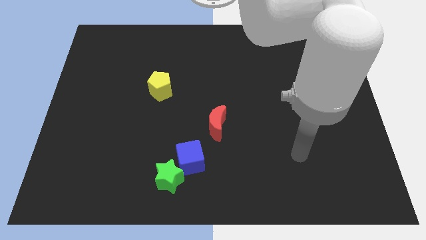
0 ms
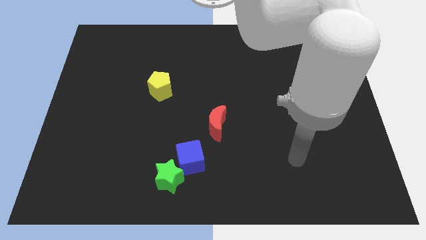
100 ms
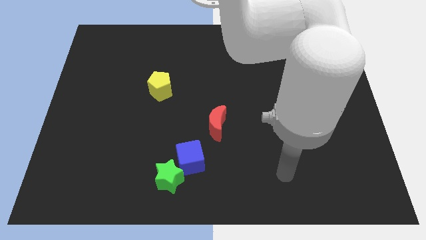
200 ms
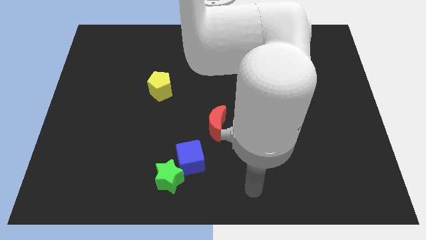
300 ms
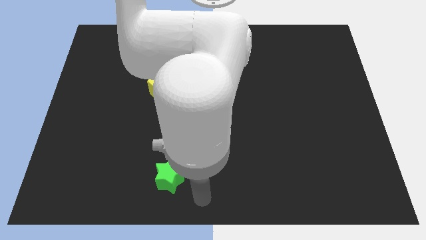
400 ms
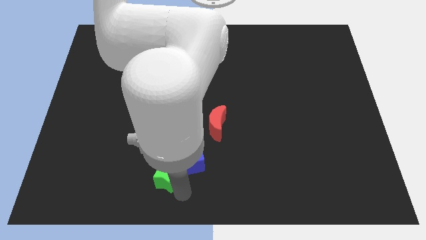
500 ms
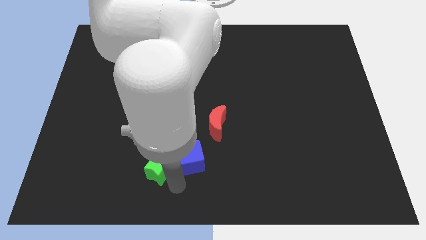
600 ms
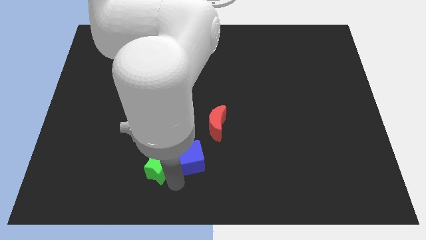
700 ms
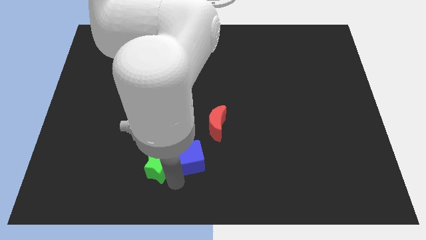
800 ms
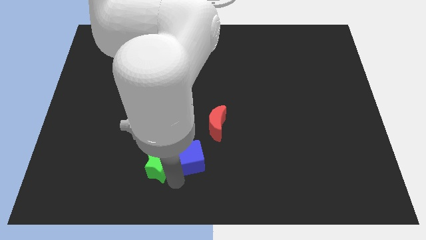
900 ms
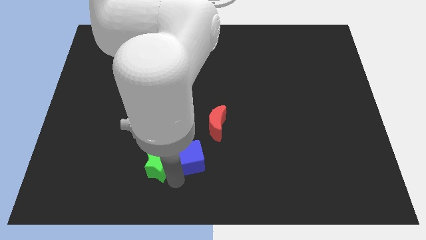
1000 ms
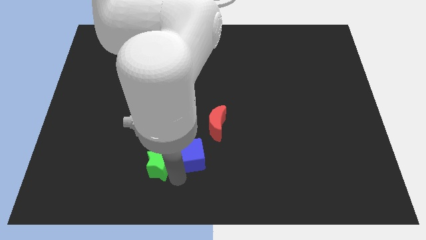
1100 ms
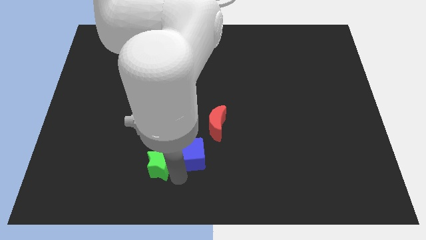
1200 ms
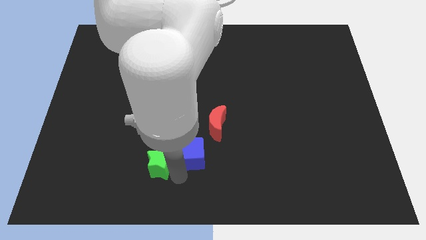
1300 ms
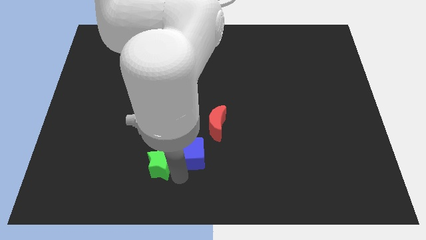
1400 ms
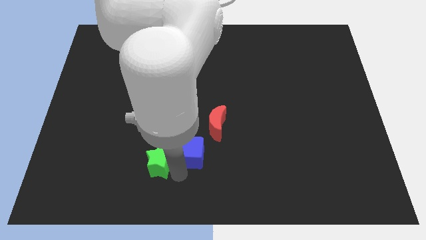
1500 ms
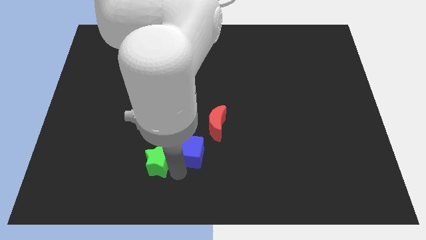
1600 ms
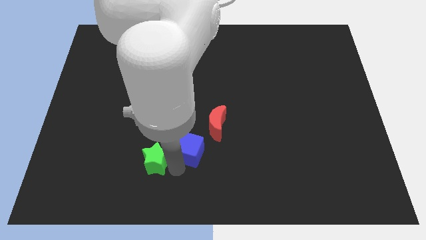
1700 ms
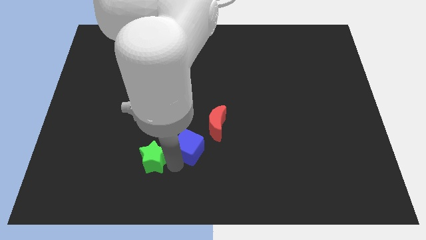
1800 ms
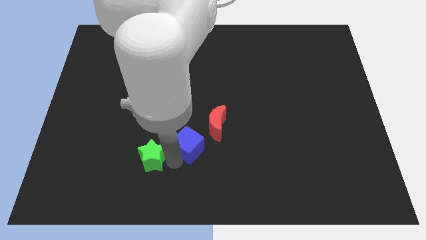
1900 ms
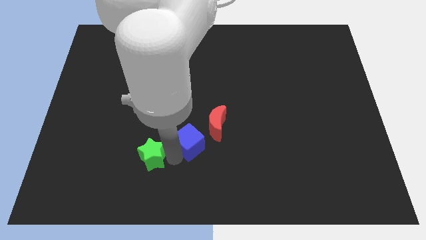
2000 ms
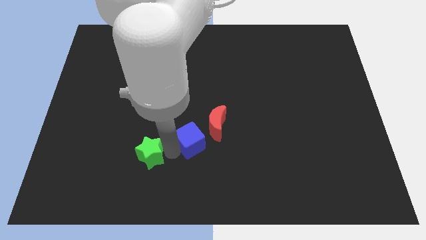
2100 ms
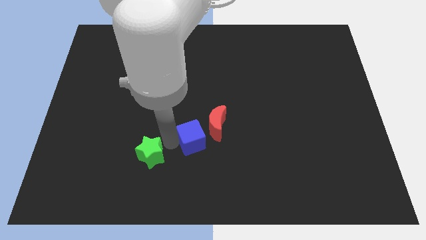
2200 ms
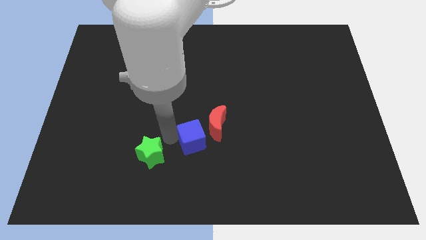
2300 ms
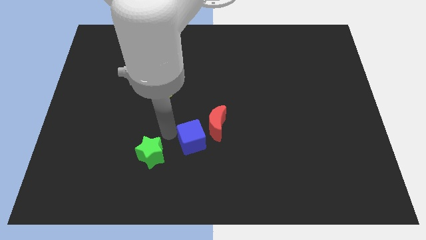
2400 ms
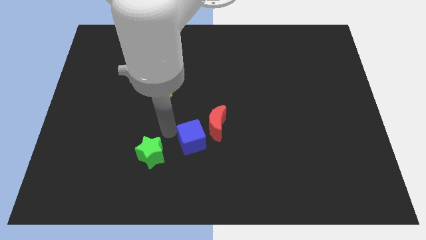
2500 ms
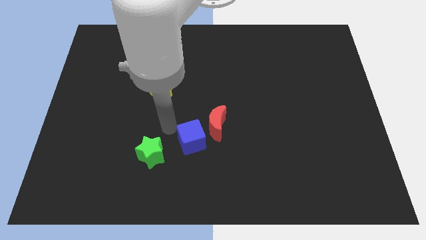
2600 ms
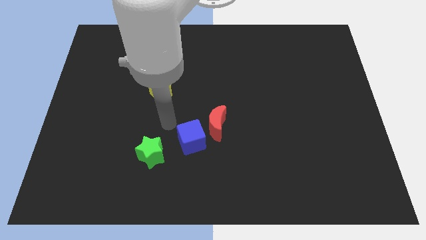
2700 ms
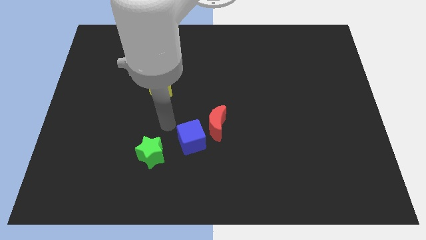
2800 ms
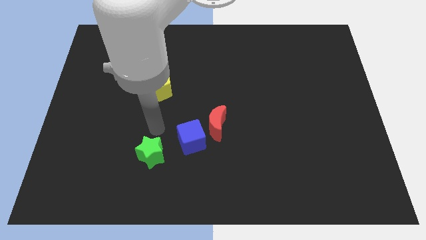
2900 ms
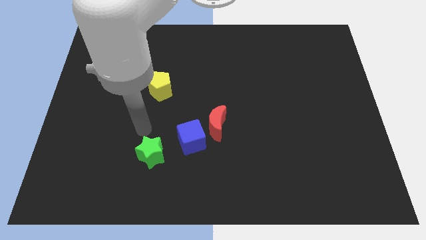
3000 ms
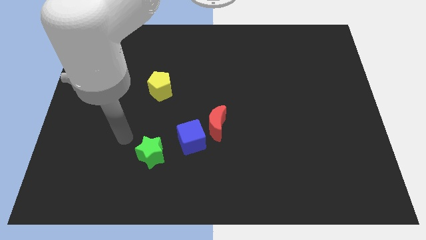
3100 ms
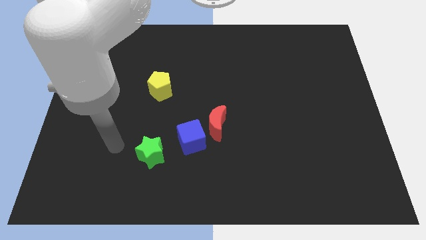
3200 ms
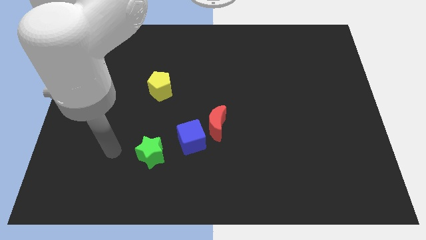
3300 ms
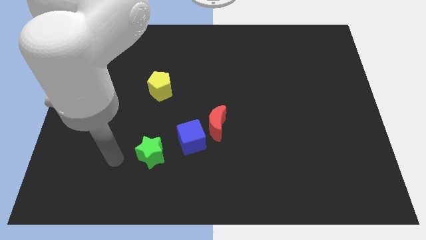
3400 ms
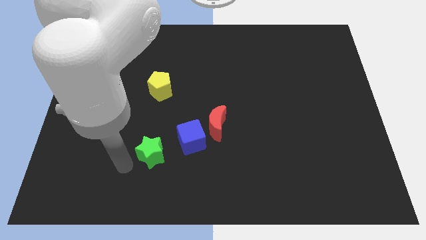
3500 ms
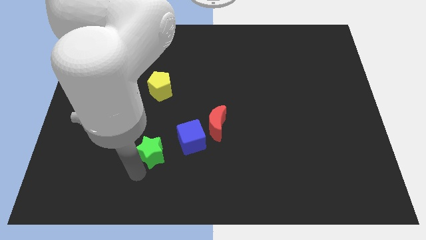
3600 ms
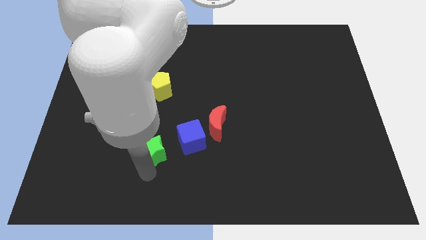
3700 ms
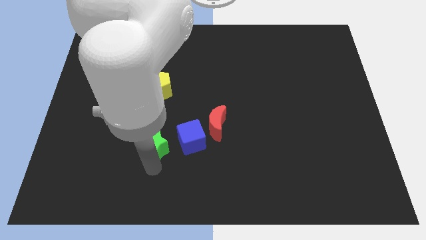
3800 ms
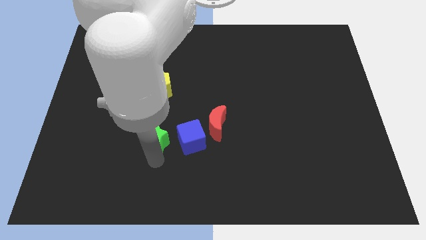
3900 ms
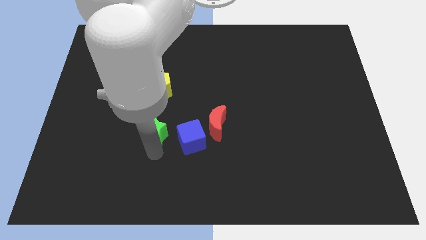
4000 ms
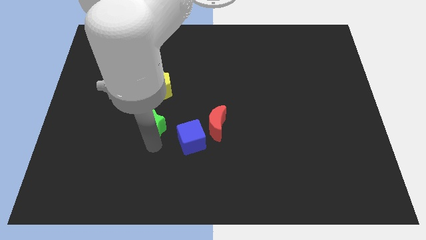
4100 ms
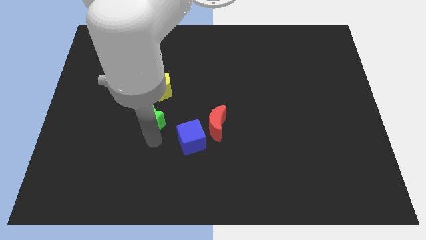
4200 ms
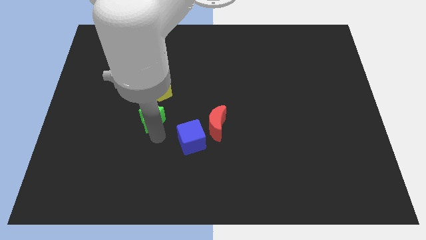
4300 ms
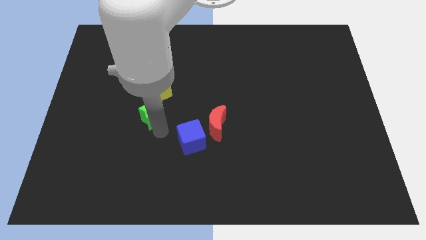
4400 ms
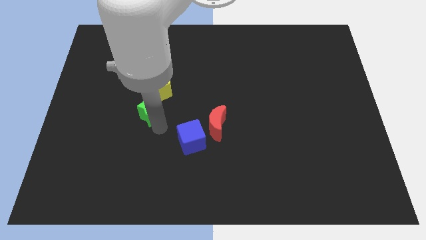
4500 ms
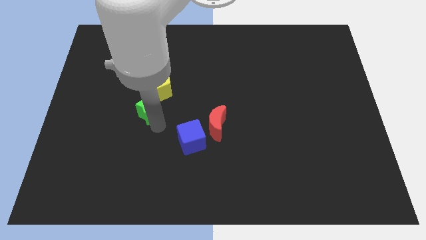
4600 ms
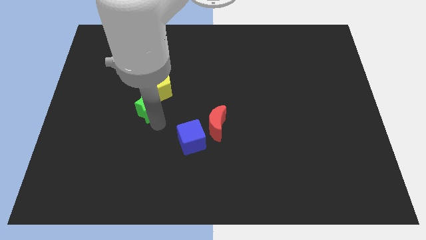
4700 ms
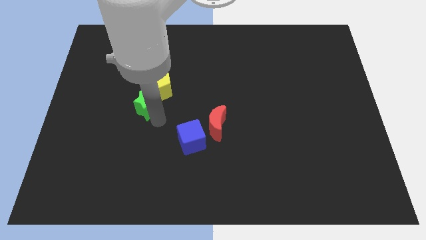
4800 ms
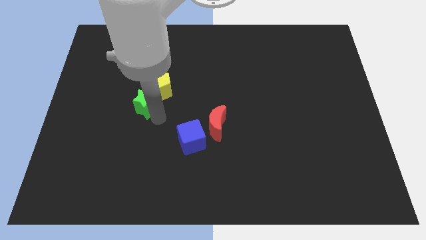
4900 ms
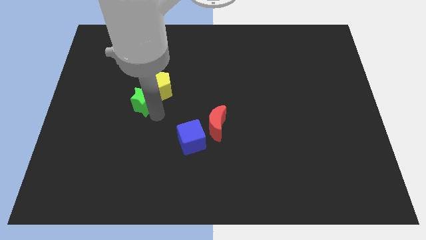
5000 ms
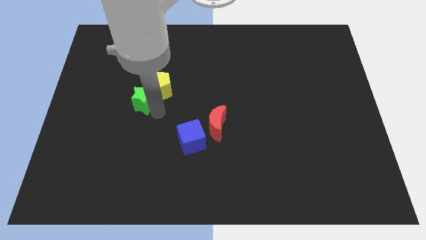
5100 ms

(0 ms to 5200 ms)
slide the green block to the yellow pentagon

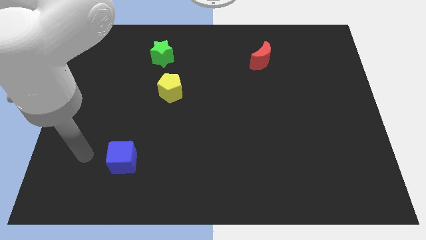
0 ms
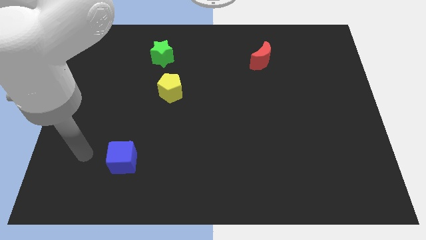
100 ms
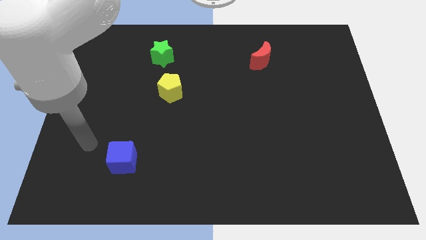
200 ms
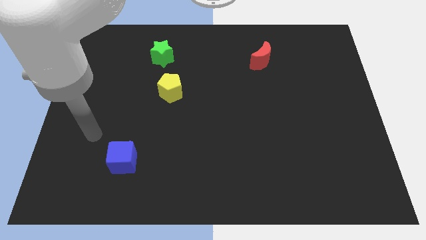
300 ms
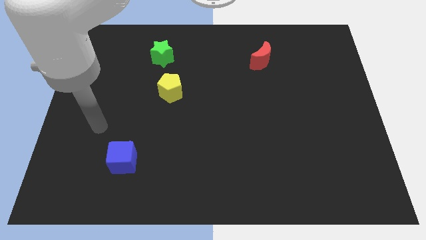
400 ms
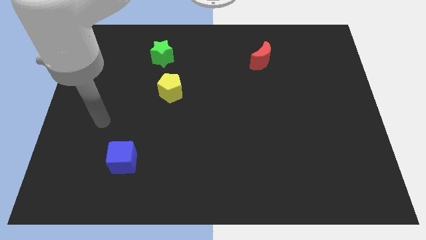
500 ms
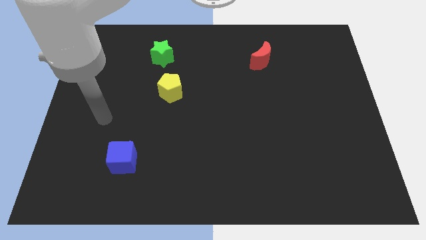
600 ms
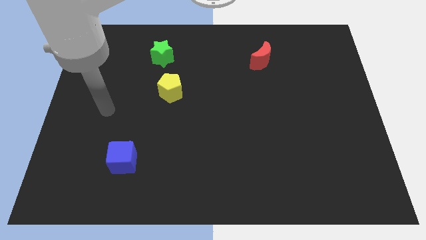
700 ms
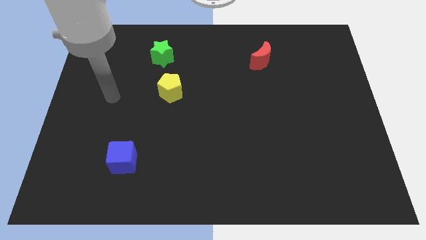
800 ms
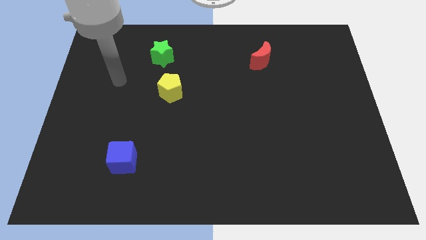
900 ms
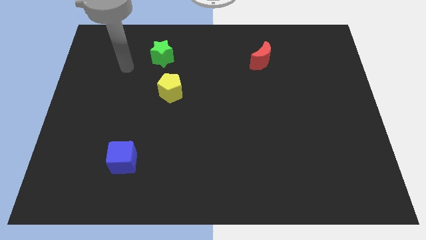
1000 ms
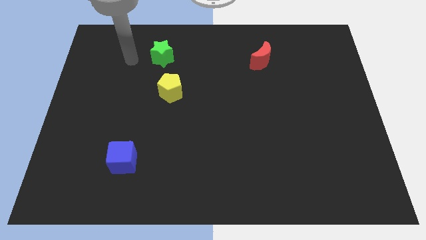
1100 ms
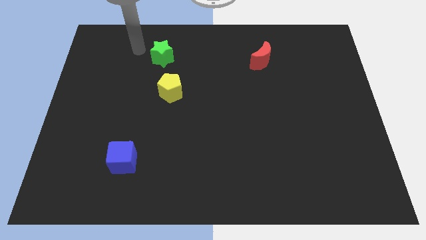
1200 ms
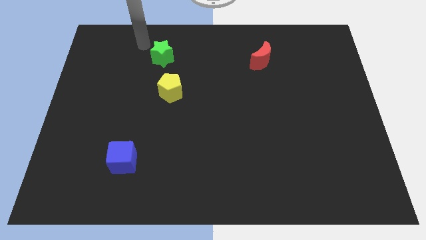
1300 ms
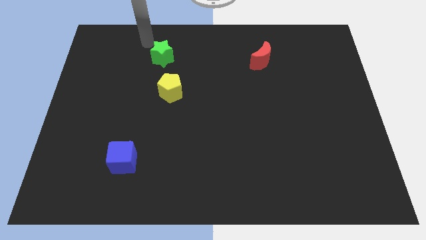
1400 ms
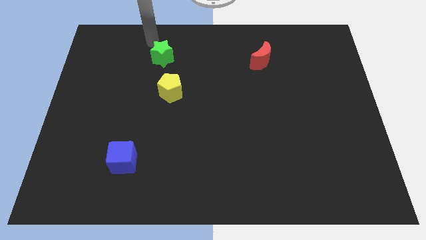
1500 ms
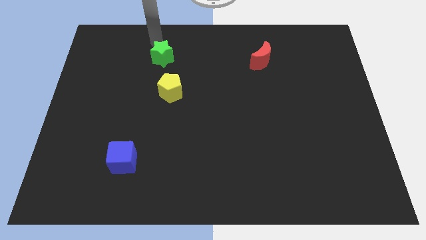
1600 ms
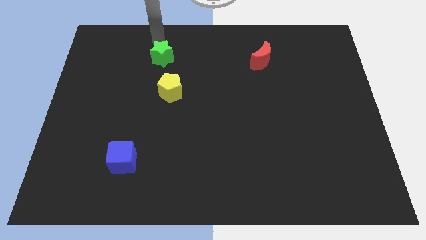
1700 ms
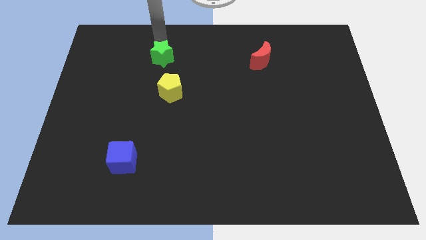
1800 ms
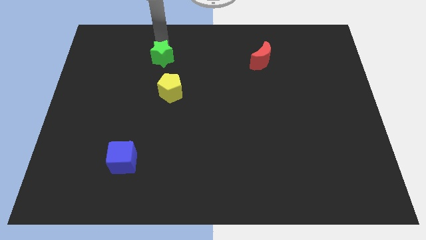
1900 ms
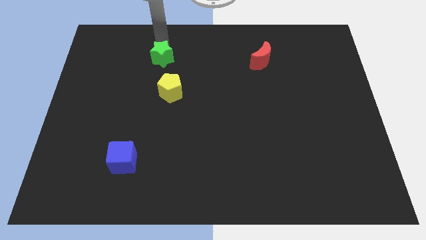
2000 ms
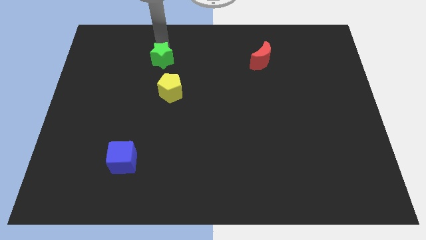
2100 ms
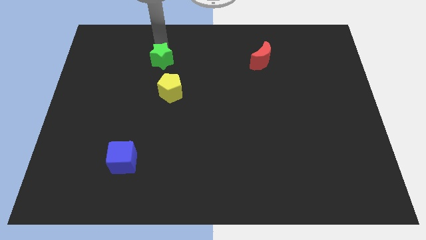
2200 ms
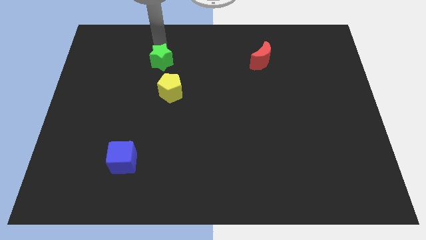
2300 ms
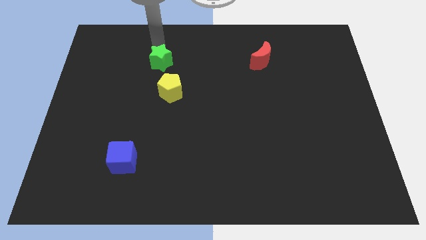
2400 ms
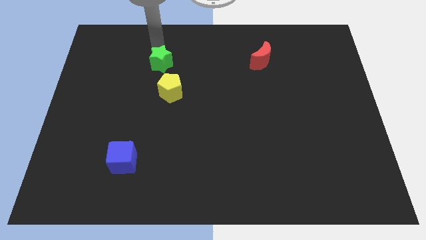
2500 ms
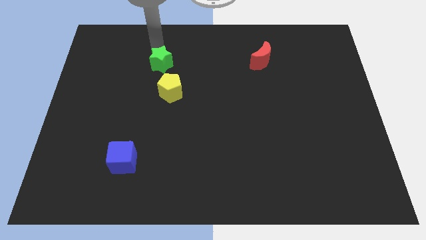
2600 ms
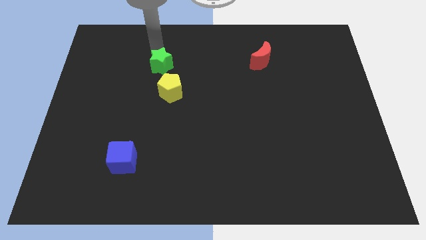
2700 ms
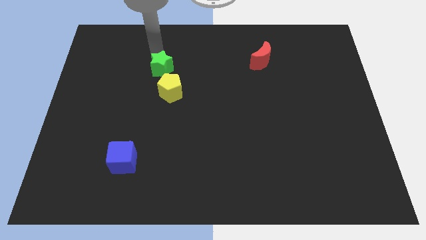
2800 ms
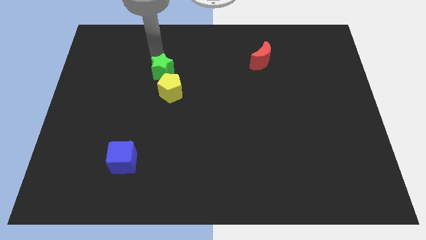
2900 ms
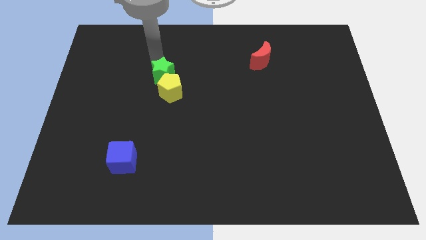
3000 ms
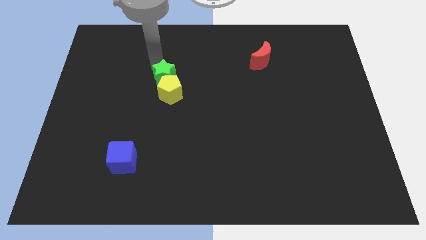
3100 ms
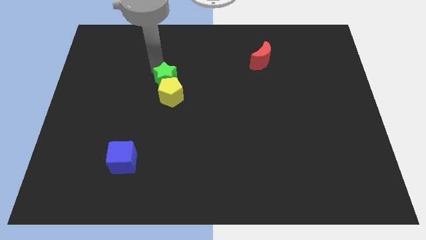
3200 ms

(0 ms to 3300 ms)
put the green star close to the yellow pentagon
